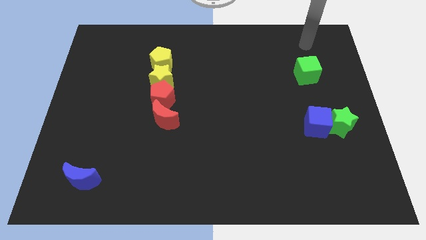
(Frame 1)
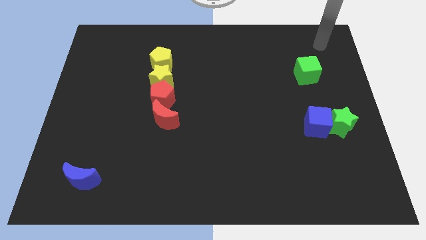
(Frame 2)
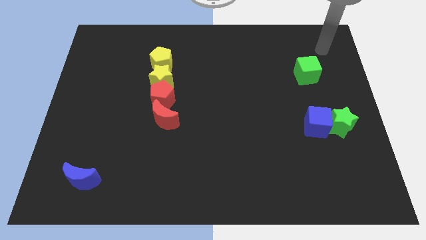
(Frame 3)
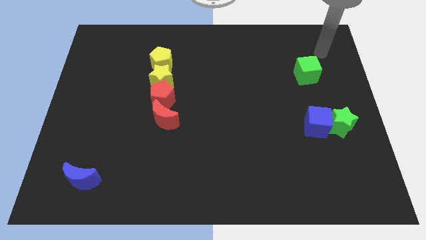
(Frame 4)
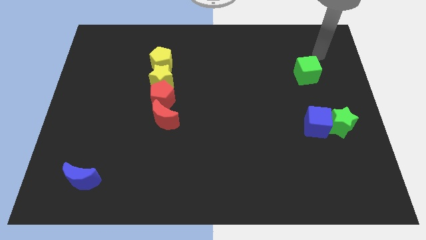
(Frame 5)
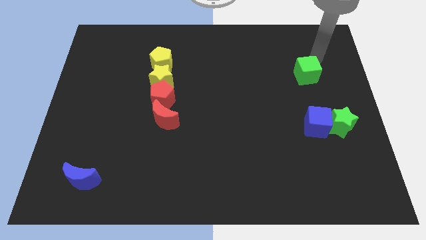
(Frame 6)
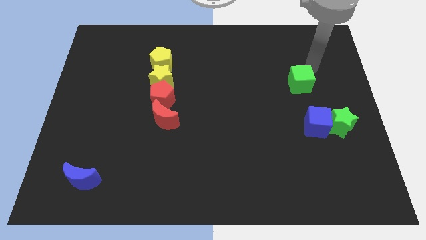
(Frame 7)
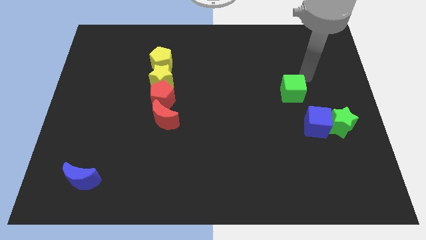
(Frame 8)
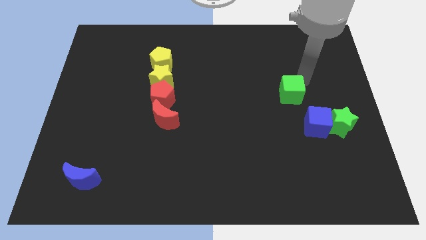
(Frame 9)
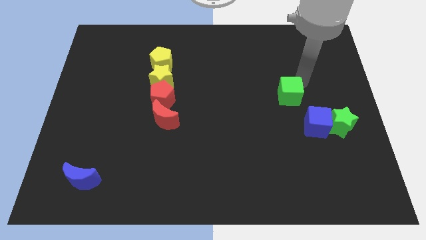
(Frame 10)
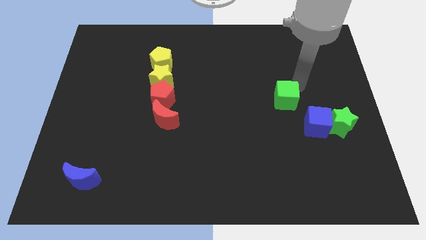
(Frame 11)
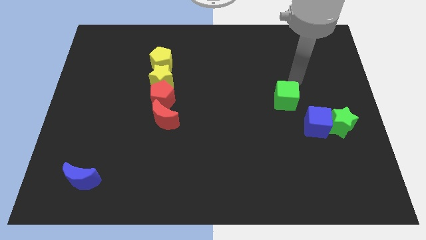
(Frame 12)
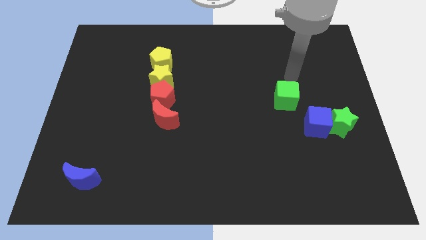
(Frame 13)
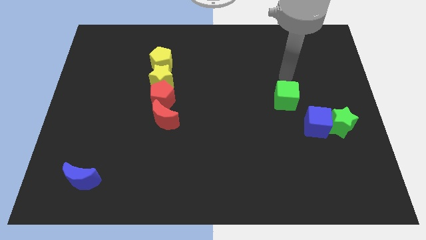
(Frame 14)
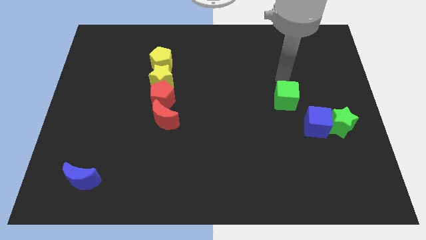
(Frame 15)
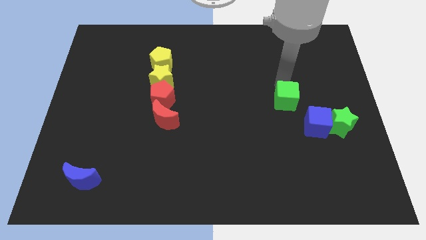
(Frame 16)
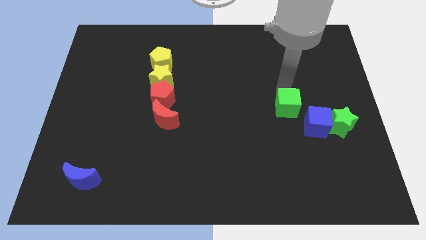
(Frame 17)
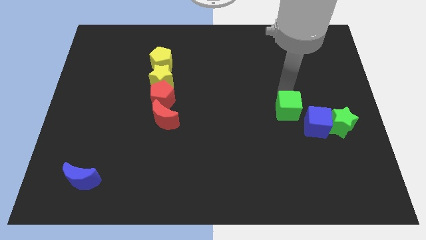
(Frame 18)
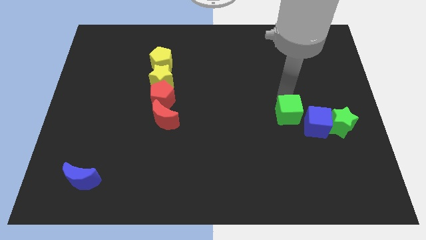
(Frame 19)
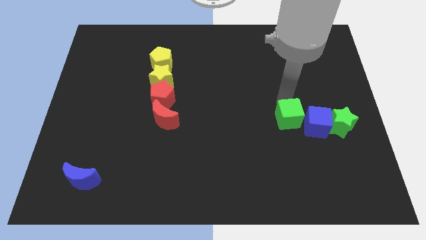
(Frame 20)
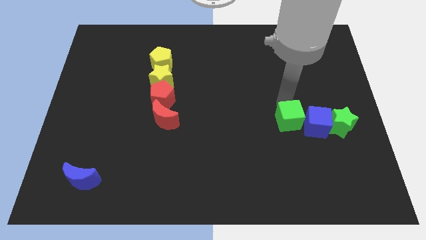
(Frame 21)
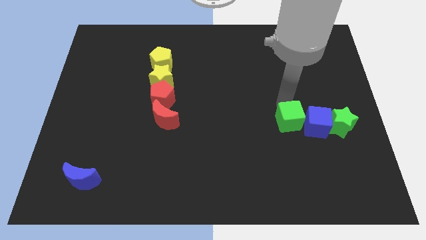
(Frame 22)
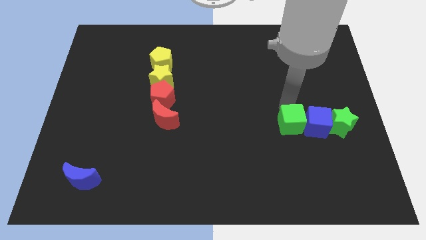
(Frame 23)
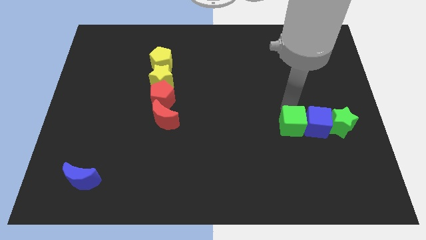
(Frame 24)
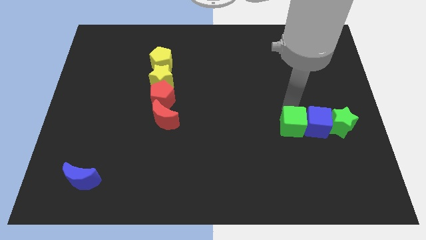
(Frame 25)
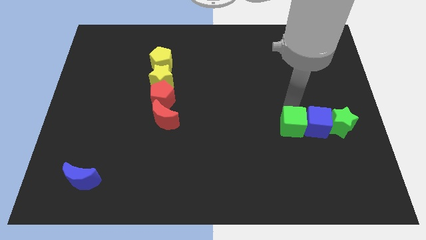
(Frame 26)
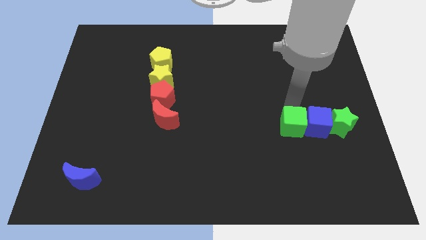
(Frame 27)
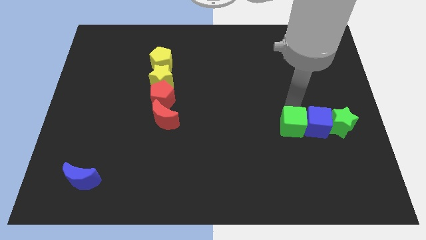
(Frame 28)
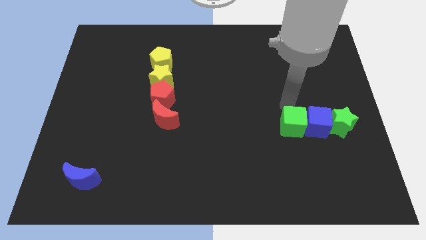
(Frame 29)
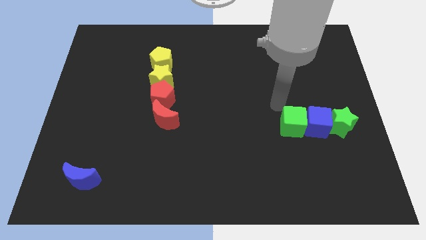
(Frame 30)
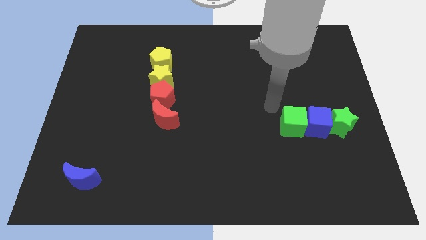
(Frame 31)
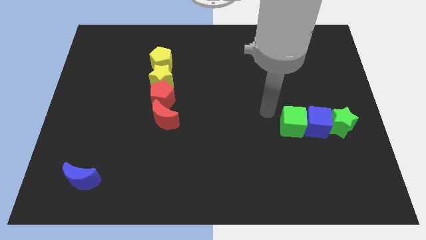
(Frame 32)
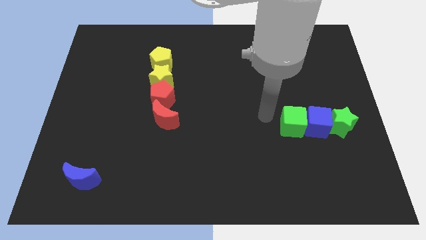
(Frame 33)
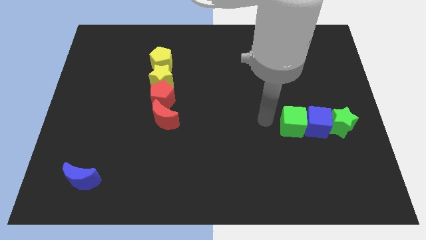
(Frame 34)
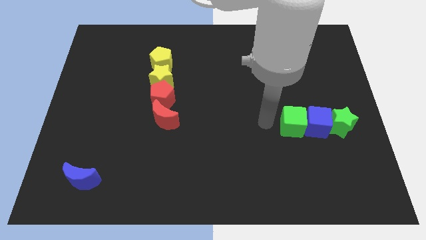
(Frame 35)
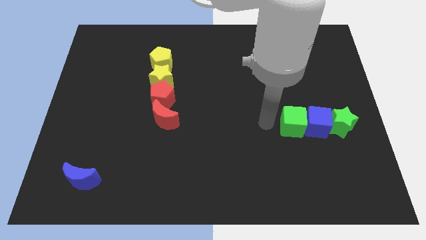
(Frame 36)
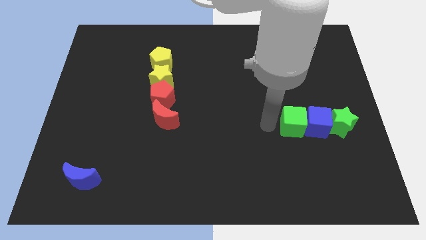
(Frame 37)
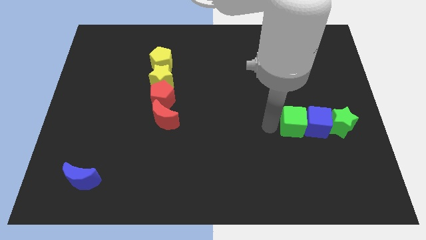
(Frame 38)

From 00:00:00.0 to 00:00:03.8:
put the green cube at the left side of the blue cube

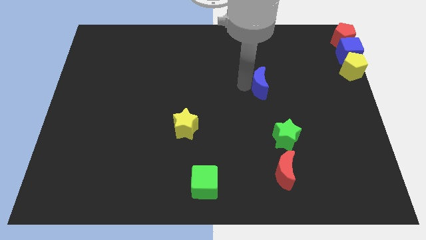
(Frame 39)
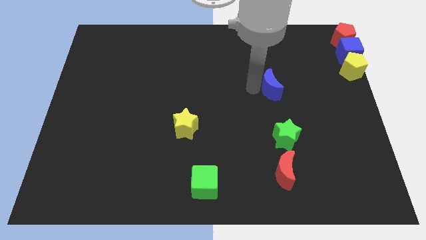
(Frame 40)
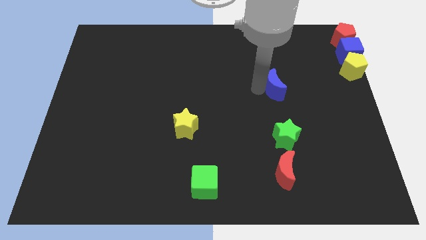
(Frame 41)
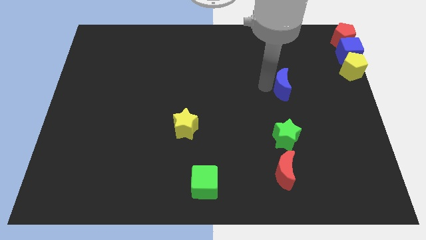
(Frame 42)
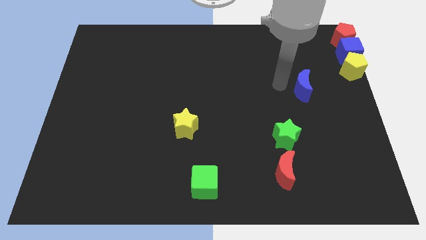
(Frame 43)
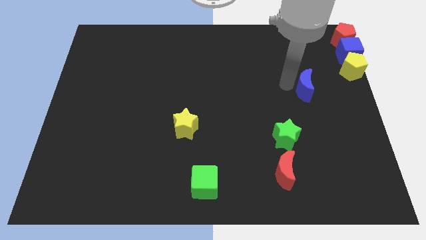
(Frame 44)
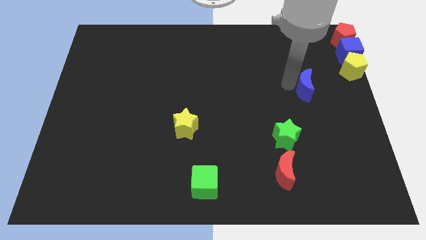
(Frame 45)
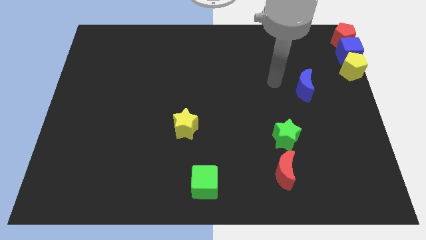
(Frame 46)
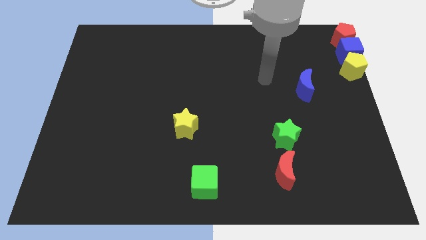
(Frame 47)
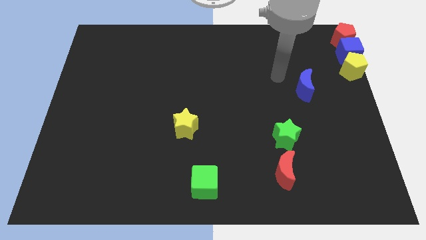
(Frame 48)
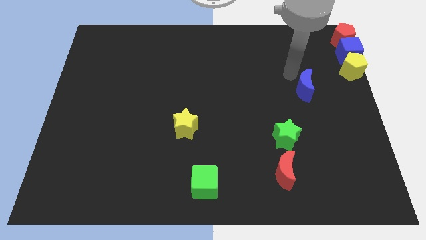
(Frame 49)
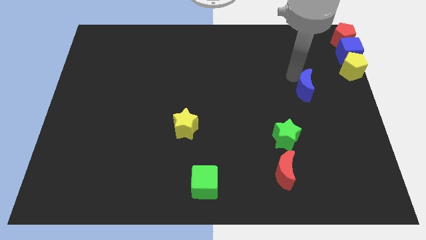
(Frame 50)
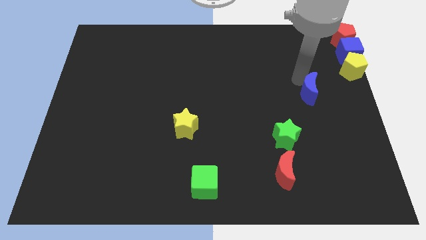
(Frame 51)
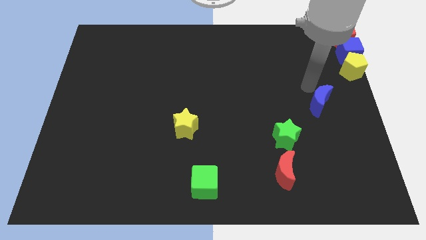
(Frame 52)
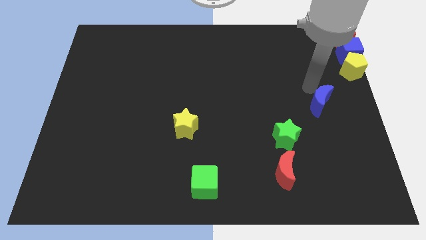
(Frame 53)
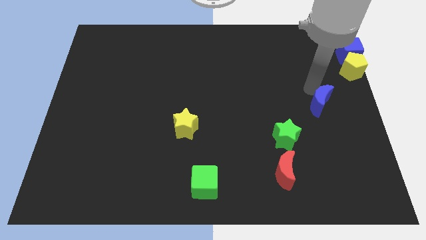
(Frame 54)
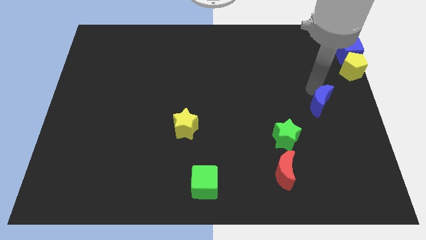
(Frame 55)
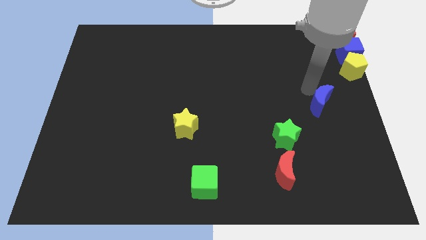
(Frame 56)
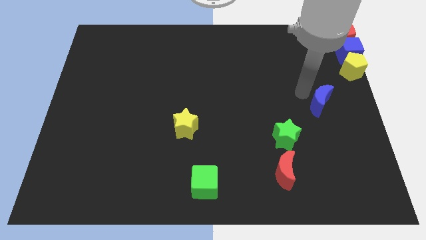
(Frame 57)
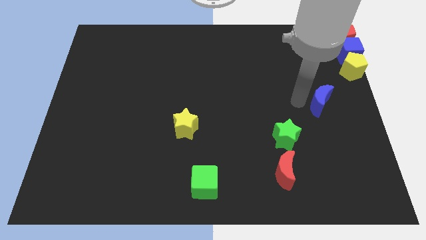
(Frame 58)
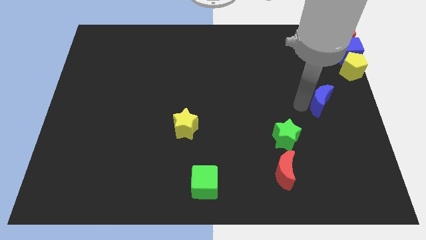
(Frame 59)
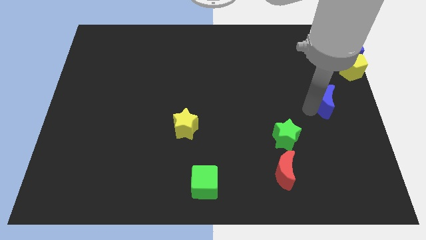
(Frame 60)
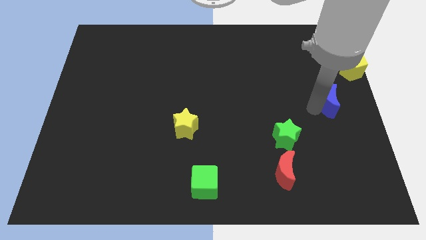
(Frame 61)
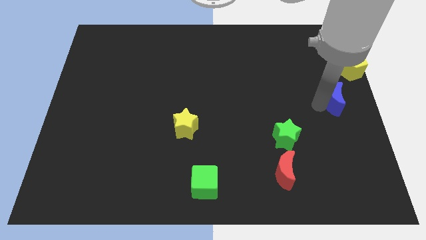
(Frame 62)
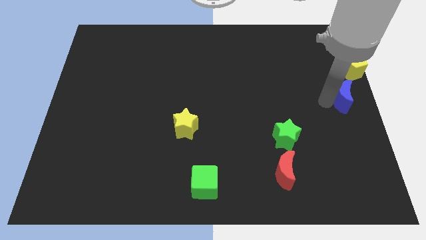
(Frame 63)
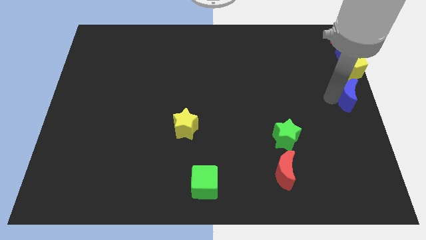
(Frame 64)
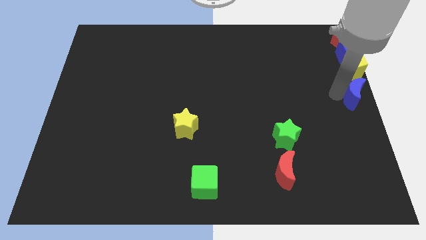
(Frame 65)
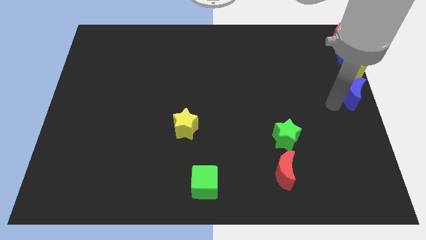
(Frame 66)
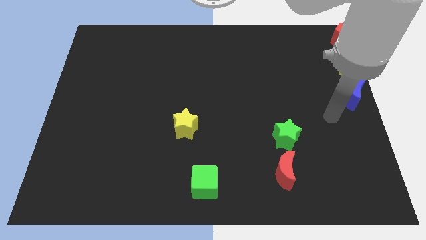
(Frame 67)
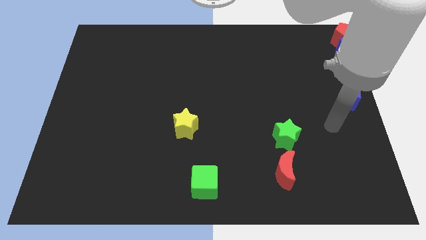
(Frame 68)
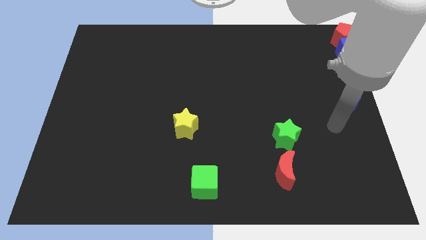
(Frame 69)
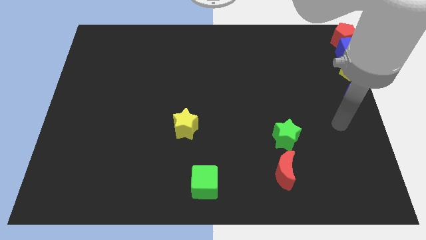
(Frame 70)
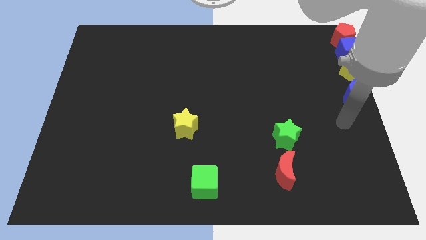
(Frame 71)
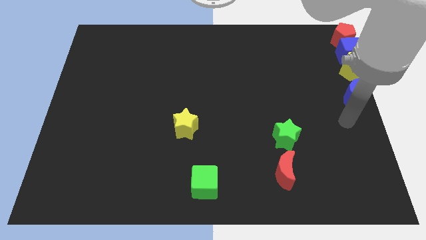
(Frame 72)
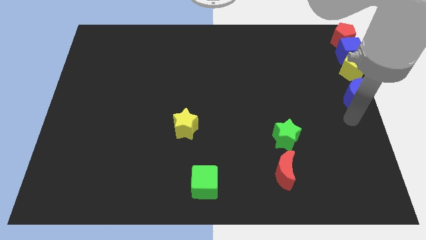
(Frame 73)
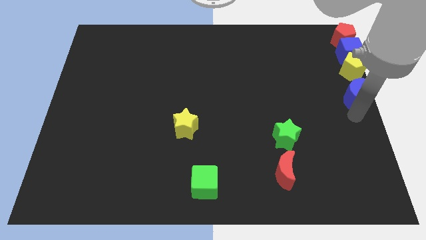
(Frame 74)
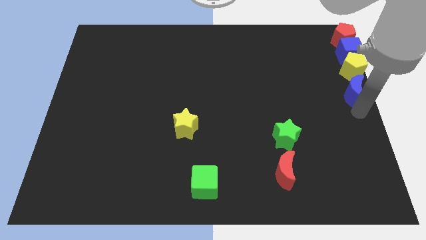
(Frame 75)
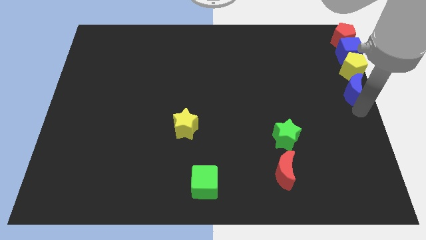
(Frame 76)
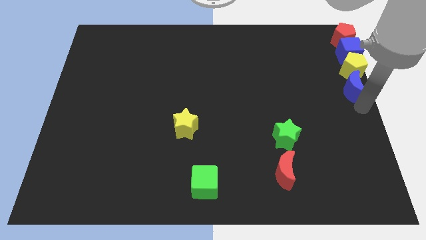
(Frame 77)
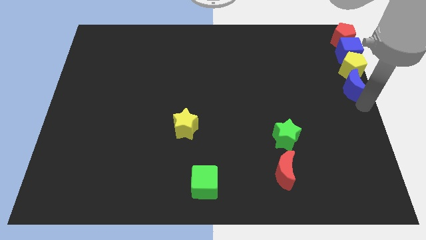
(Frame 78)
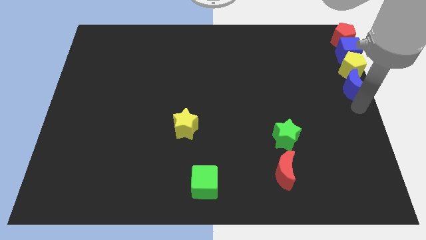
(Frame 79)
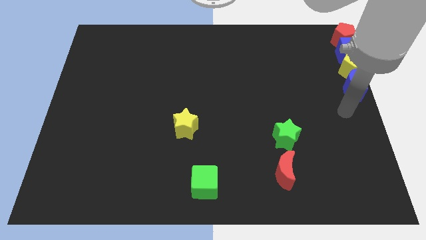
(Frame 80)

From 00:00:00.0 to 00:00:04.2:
place the blue crescent below the yellow pentagon

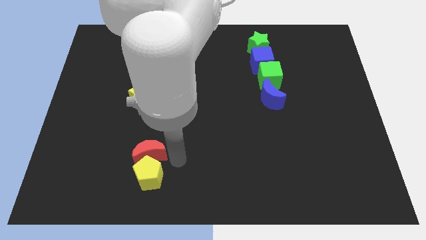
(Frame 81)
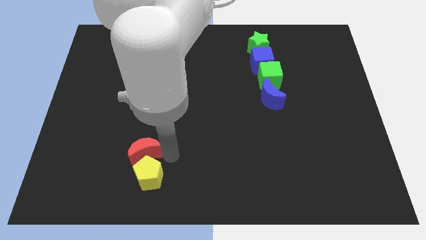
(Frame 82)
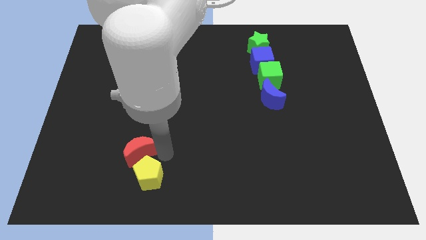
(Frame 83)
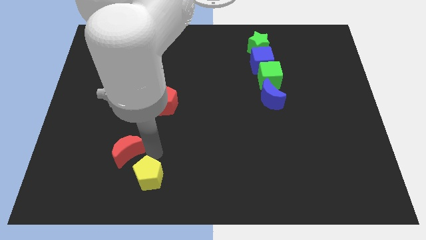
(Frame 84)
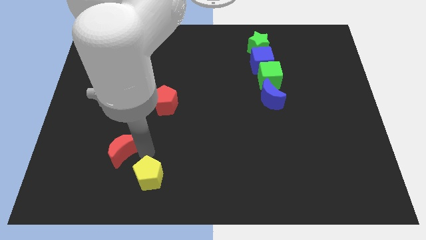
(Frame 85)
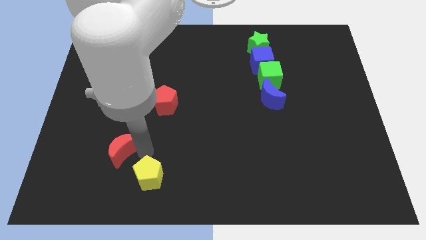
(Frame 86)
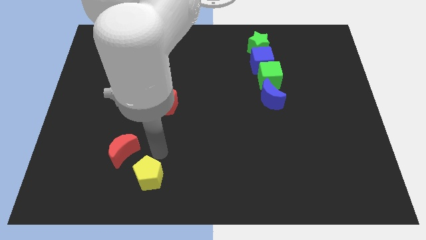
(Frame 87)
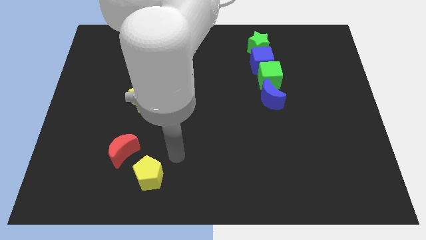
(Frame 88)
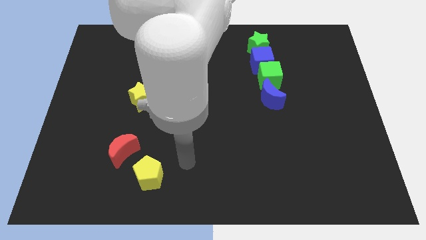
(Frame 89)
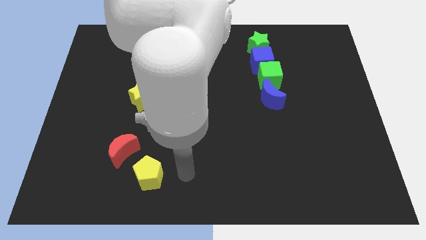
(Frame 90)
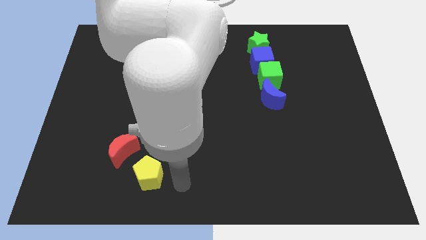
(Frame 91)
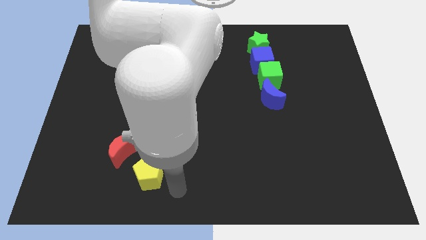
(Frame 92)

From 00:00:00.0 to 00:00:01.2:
move the red crescent to the left of the board
